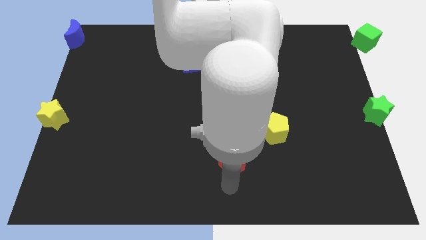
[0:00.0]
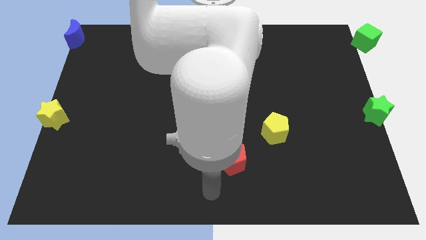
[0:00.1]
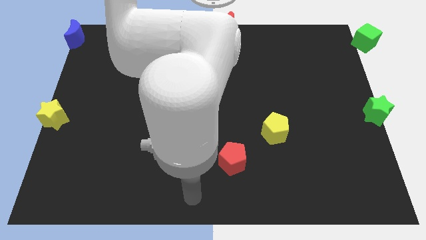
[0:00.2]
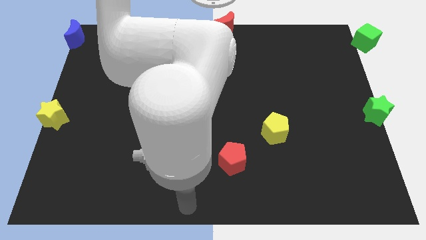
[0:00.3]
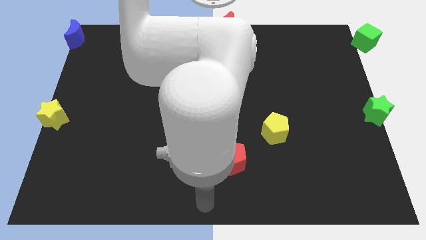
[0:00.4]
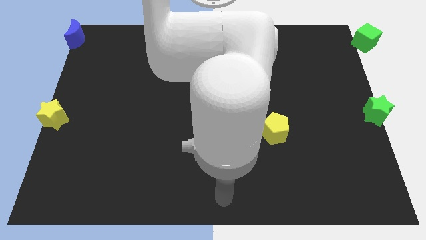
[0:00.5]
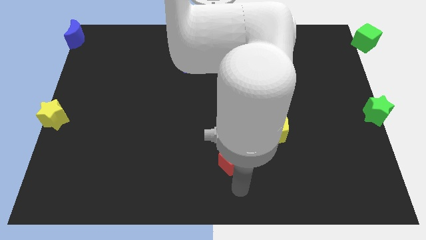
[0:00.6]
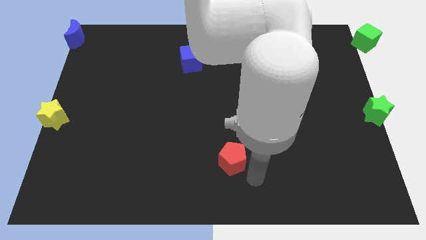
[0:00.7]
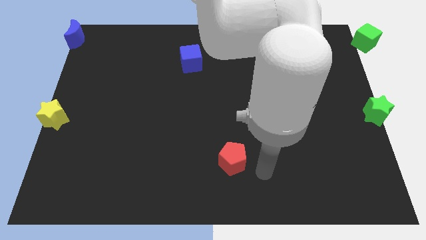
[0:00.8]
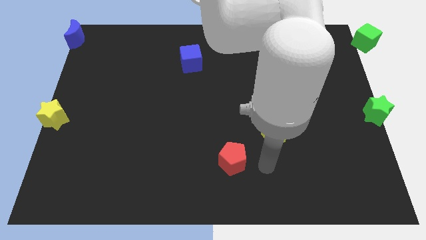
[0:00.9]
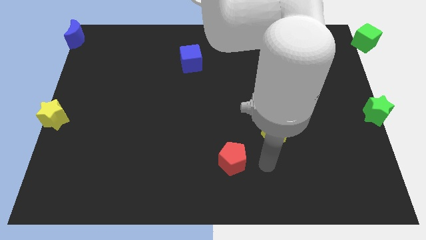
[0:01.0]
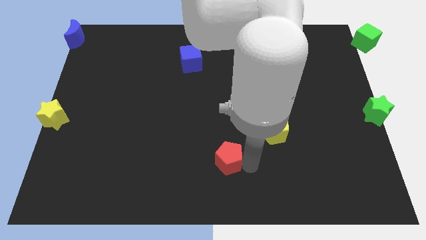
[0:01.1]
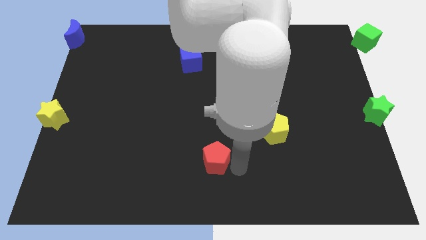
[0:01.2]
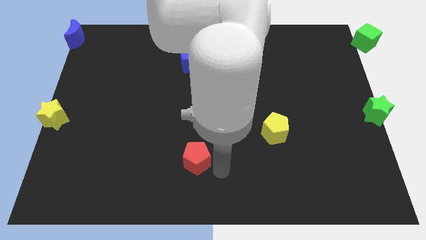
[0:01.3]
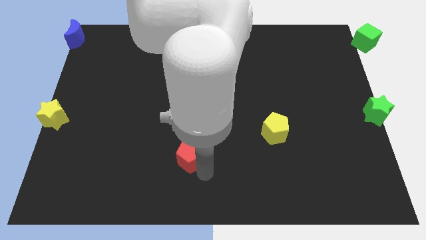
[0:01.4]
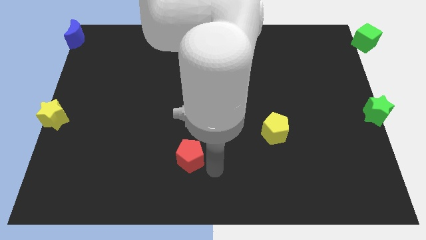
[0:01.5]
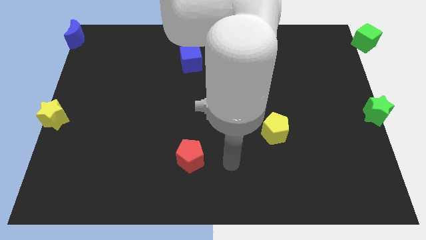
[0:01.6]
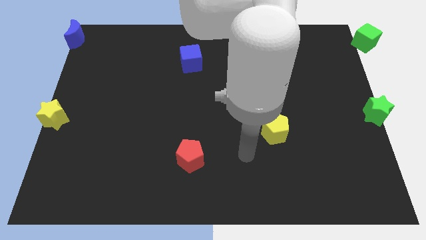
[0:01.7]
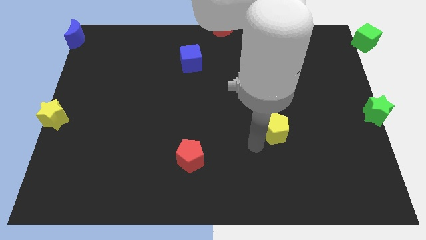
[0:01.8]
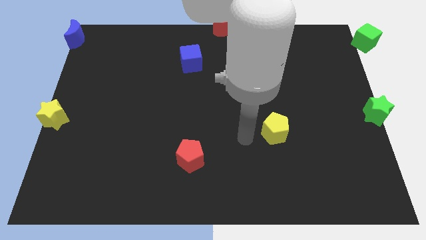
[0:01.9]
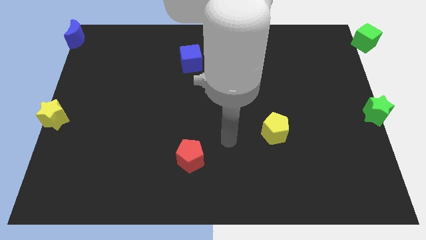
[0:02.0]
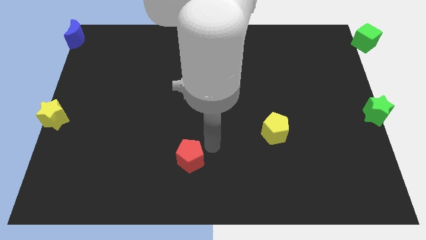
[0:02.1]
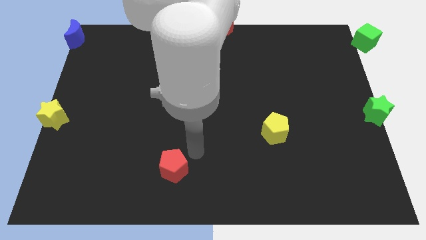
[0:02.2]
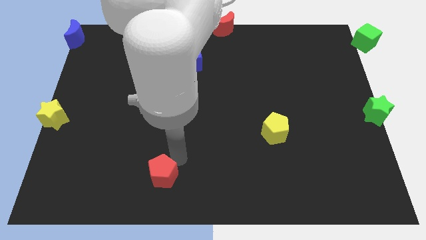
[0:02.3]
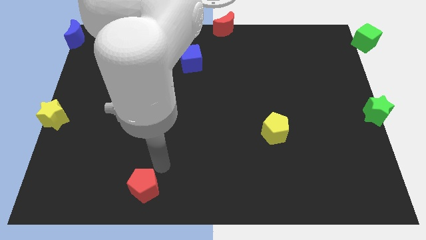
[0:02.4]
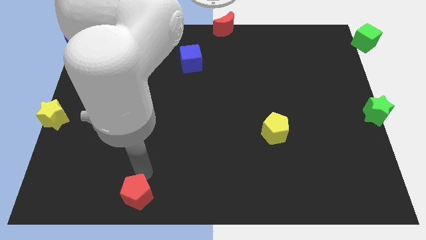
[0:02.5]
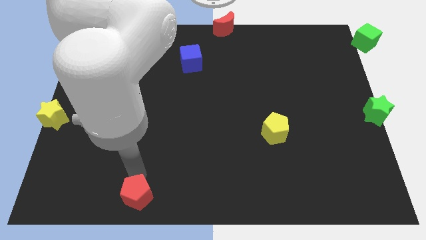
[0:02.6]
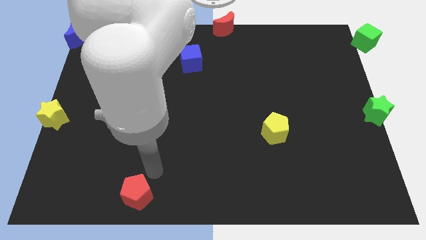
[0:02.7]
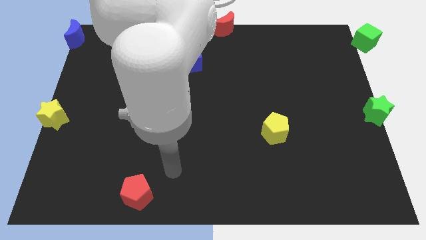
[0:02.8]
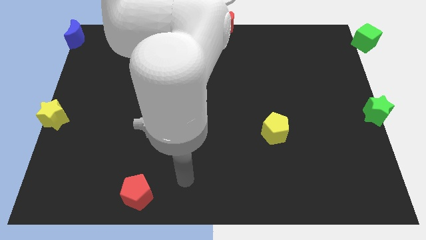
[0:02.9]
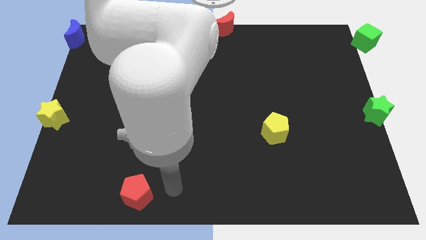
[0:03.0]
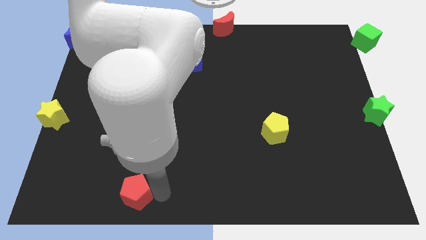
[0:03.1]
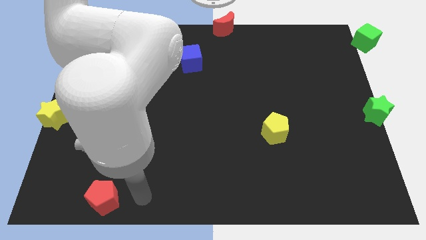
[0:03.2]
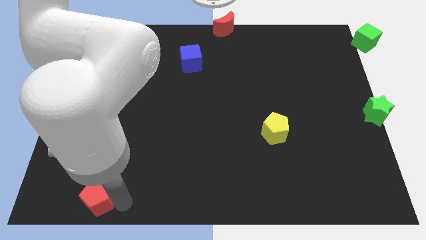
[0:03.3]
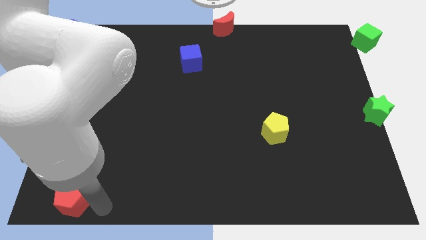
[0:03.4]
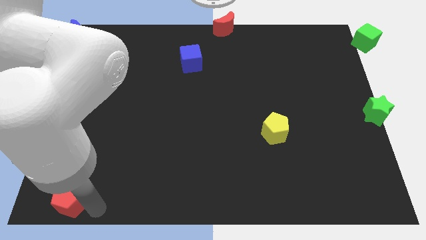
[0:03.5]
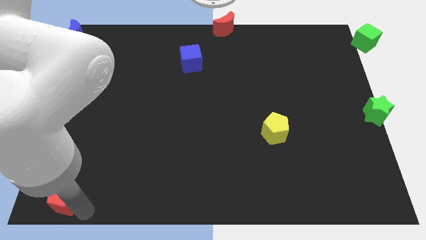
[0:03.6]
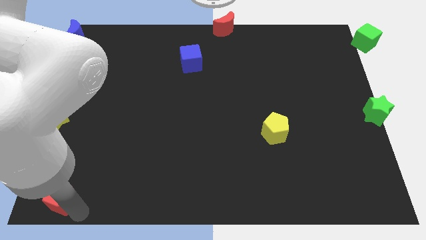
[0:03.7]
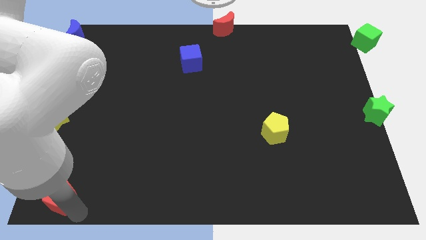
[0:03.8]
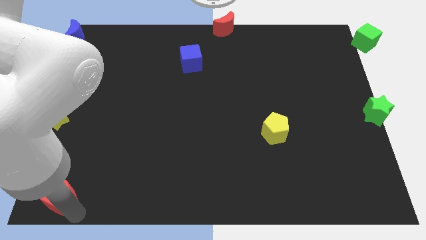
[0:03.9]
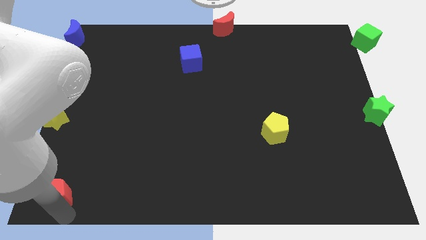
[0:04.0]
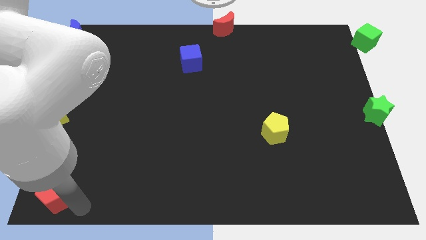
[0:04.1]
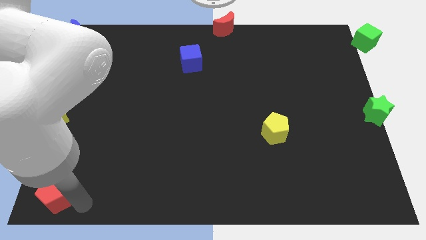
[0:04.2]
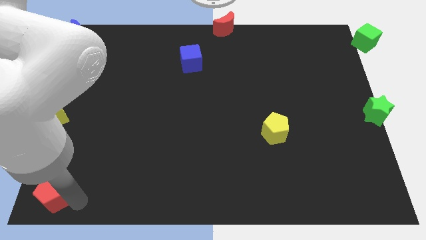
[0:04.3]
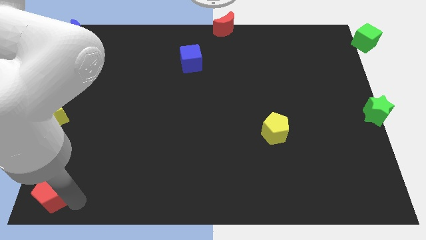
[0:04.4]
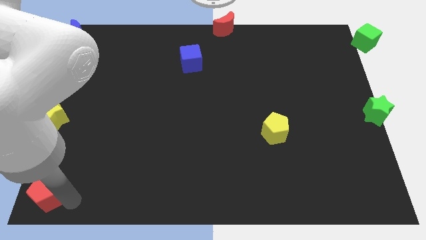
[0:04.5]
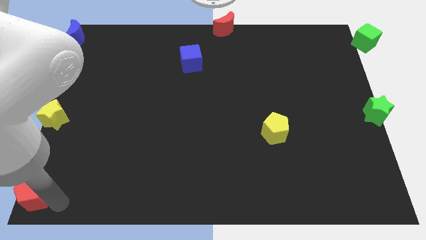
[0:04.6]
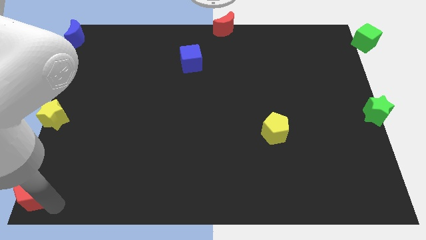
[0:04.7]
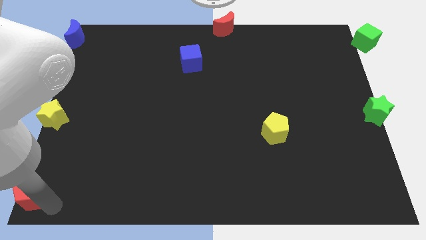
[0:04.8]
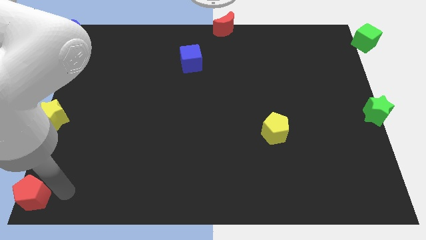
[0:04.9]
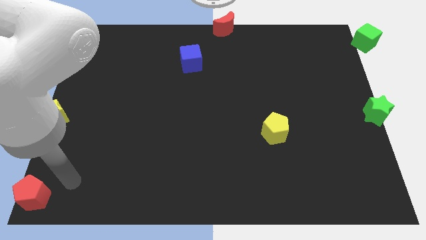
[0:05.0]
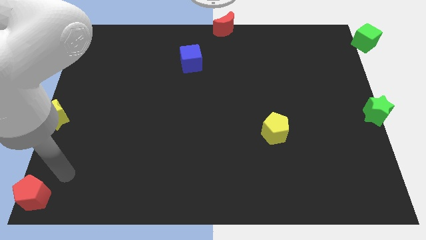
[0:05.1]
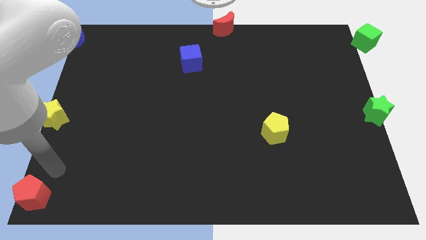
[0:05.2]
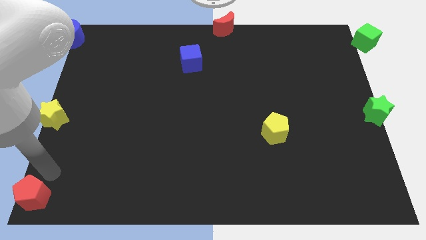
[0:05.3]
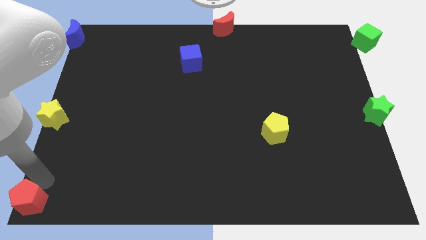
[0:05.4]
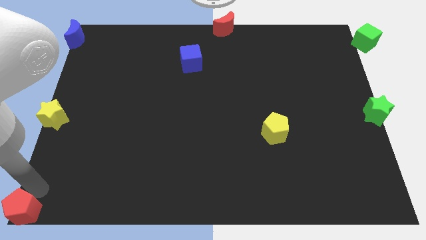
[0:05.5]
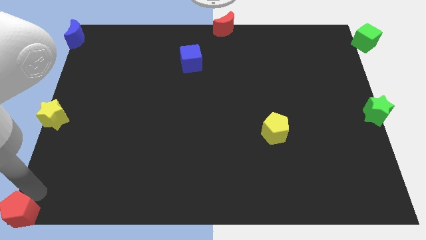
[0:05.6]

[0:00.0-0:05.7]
move the red pentagon to the bottom left center

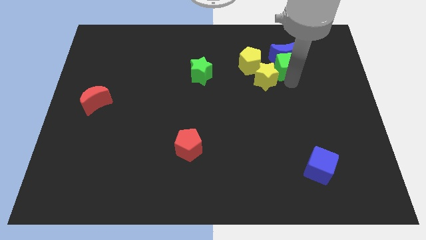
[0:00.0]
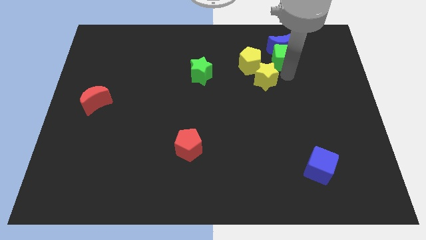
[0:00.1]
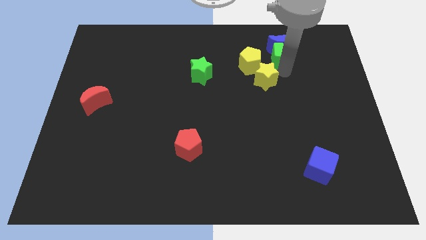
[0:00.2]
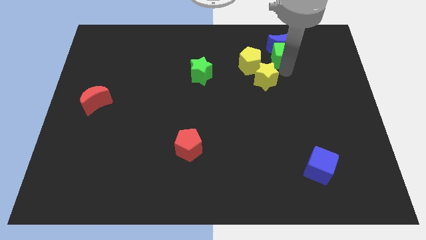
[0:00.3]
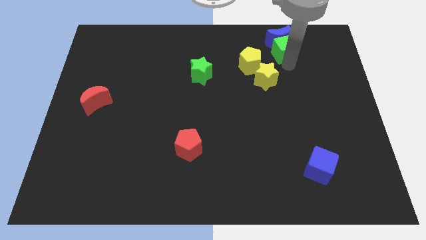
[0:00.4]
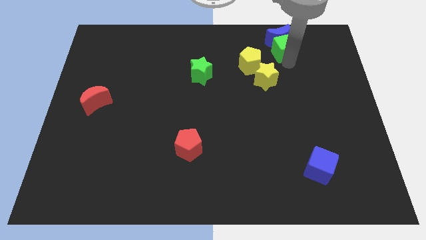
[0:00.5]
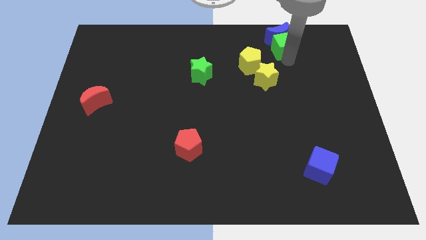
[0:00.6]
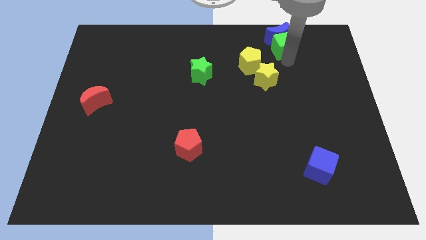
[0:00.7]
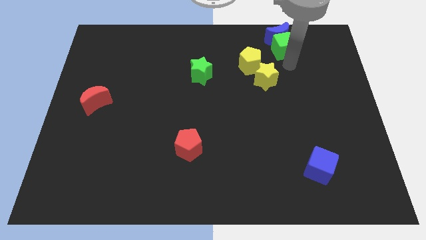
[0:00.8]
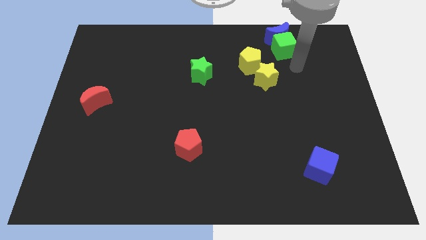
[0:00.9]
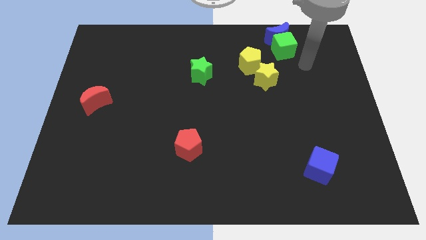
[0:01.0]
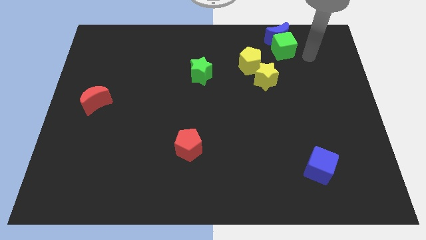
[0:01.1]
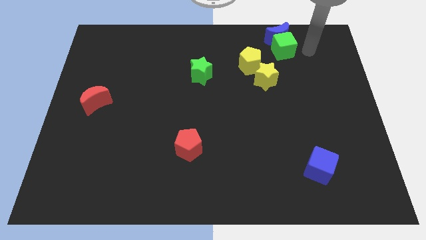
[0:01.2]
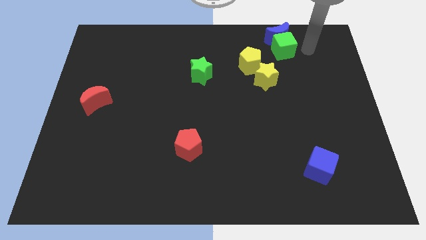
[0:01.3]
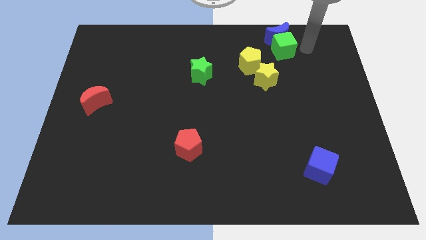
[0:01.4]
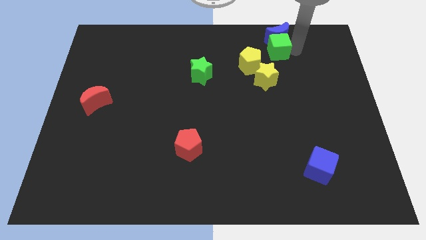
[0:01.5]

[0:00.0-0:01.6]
move green cube and blue moon upwards

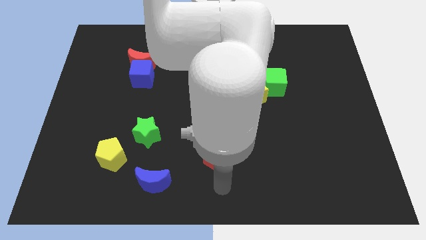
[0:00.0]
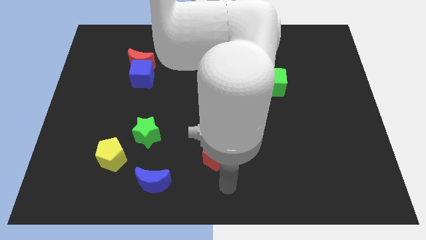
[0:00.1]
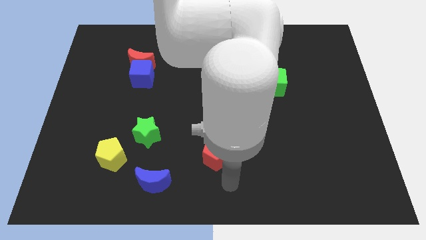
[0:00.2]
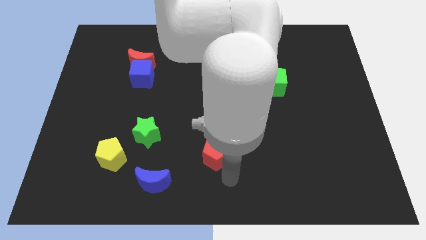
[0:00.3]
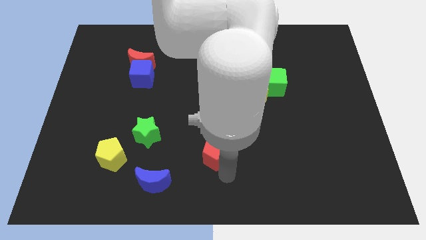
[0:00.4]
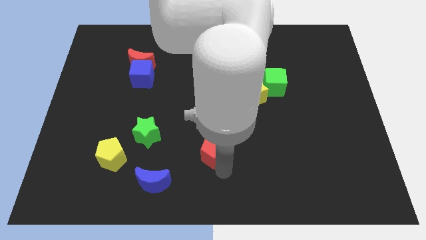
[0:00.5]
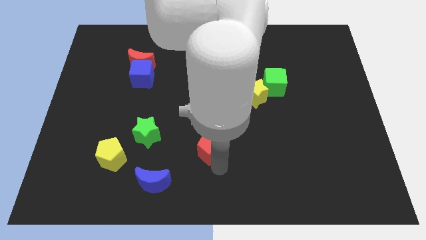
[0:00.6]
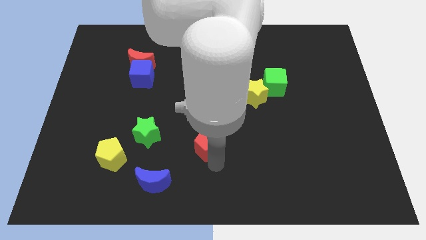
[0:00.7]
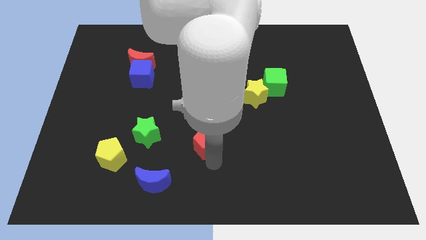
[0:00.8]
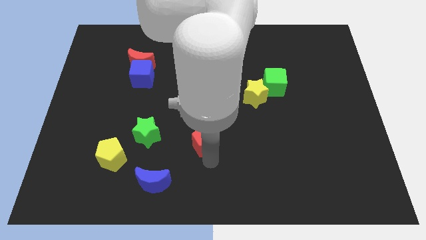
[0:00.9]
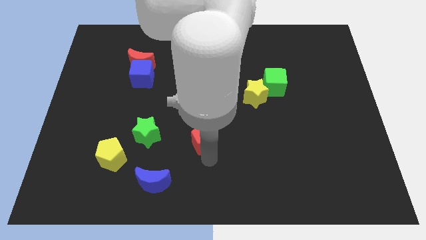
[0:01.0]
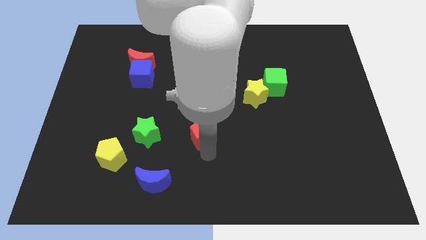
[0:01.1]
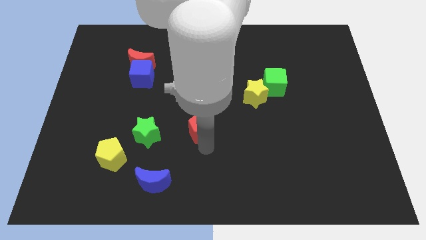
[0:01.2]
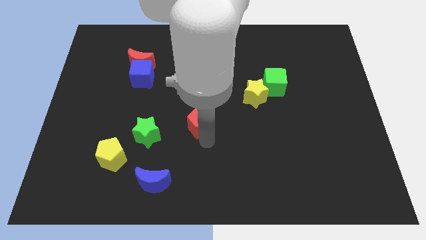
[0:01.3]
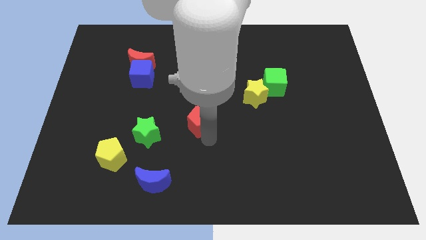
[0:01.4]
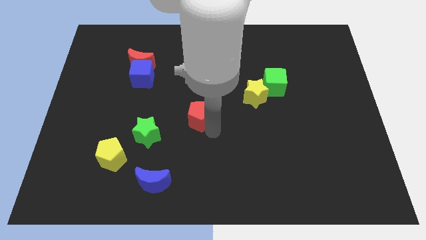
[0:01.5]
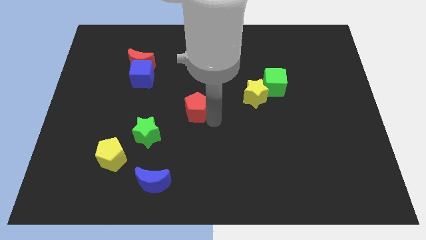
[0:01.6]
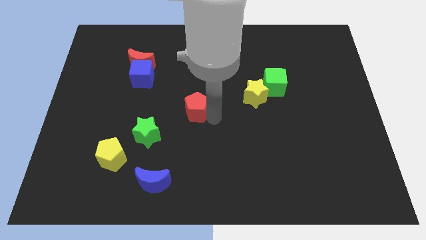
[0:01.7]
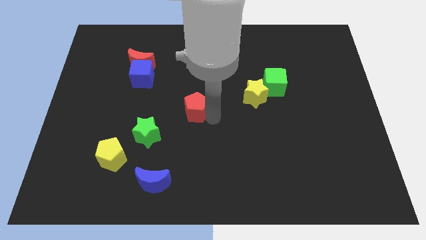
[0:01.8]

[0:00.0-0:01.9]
slide the red pentagon towards up
